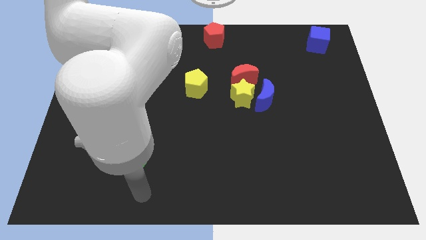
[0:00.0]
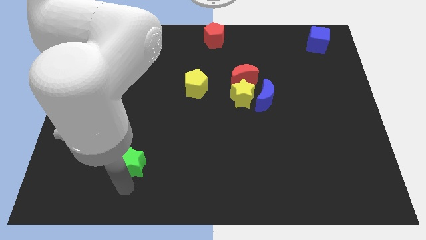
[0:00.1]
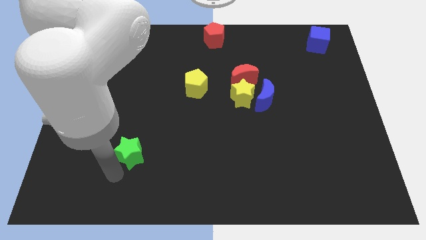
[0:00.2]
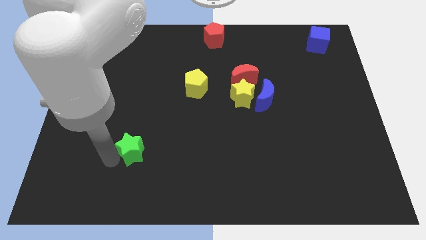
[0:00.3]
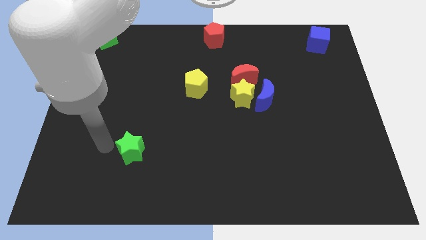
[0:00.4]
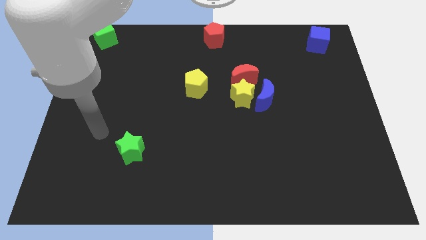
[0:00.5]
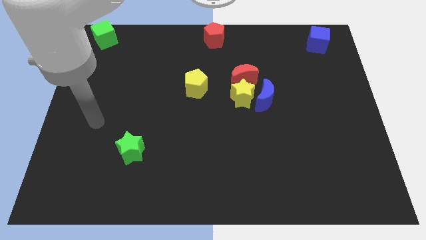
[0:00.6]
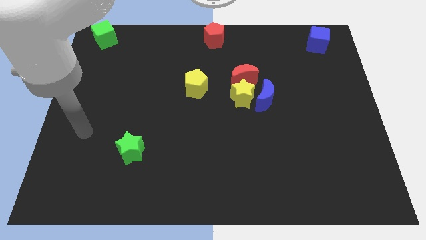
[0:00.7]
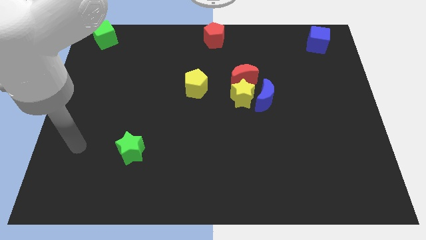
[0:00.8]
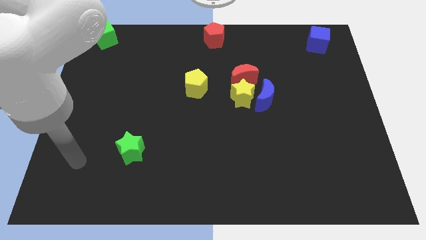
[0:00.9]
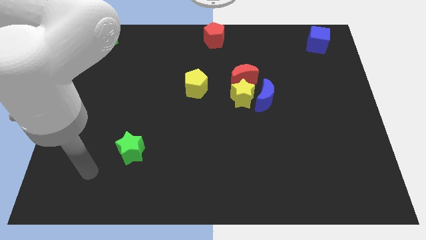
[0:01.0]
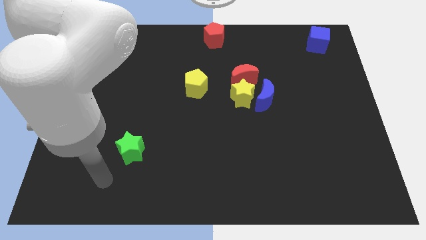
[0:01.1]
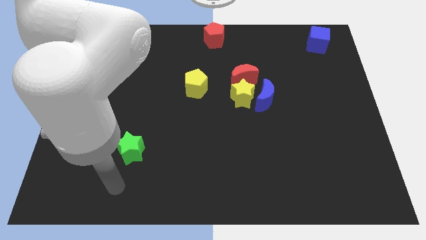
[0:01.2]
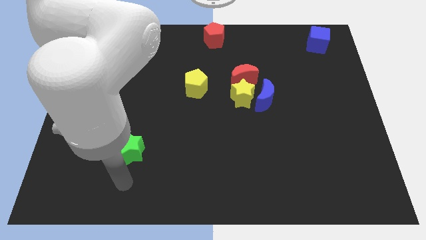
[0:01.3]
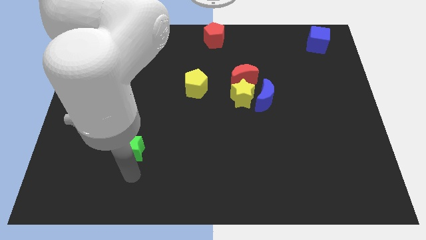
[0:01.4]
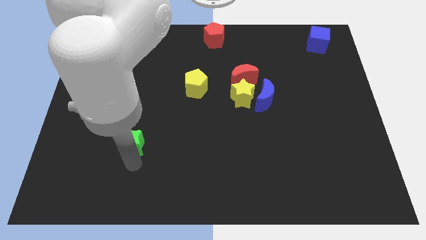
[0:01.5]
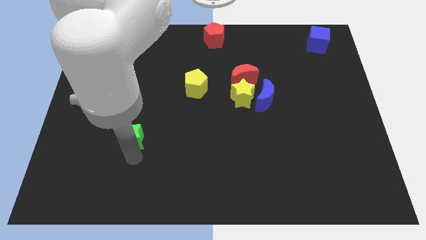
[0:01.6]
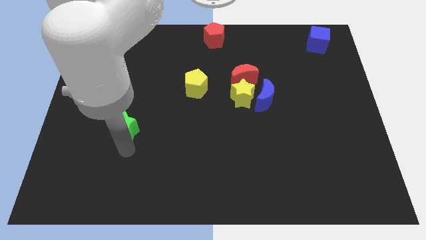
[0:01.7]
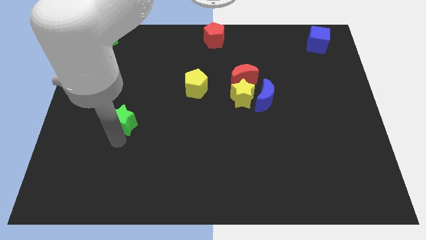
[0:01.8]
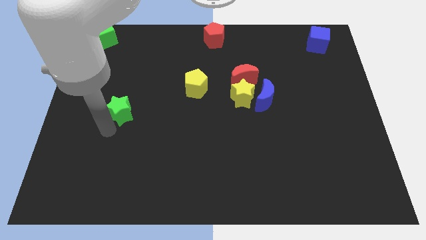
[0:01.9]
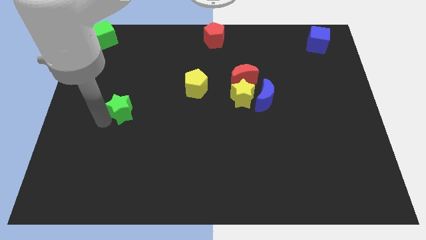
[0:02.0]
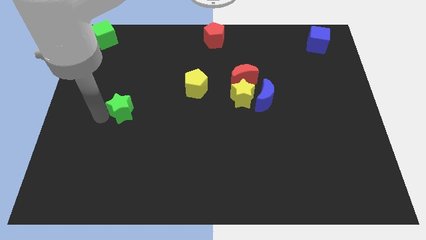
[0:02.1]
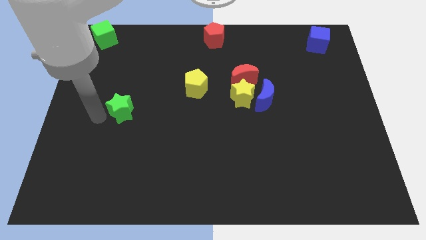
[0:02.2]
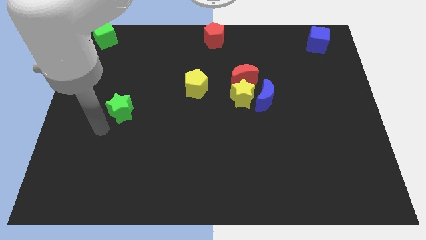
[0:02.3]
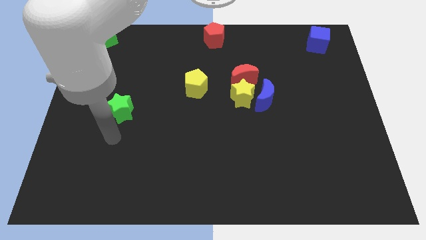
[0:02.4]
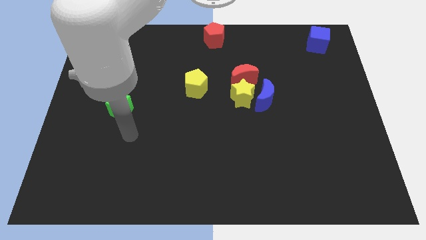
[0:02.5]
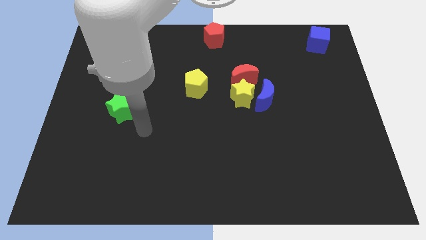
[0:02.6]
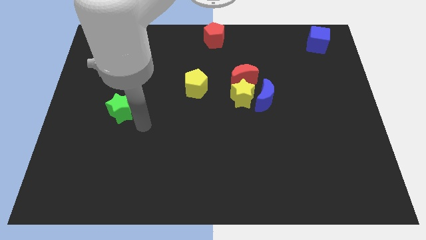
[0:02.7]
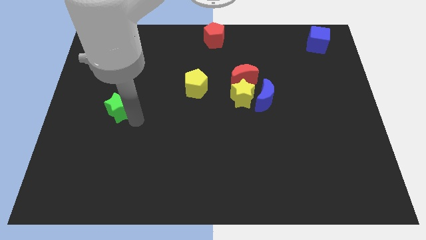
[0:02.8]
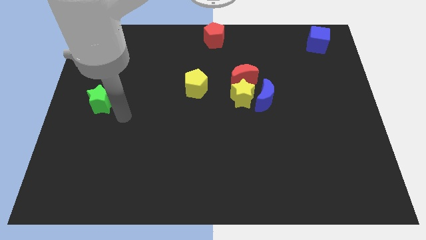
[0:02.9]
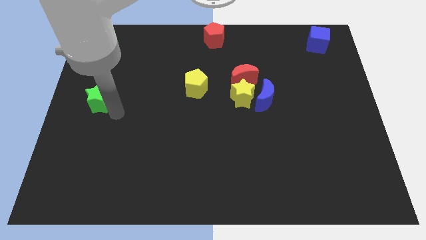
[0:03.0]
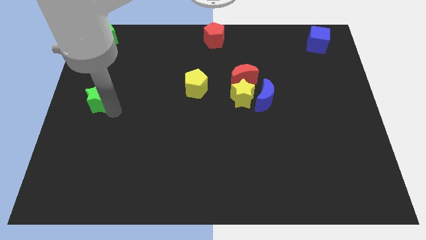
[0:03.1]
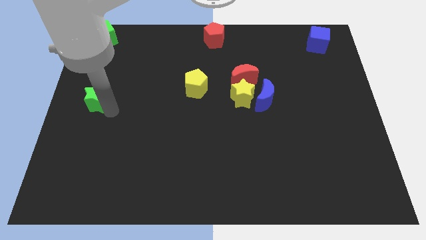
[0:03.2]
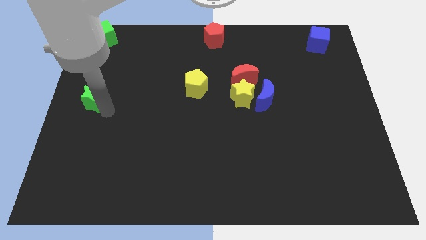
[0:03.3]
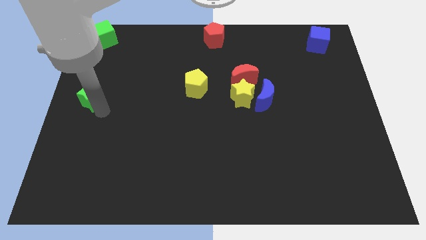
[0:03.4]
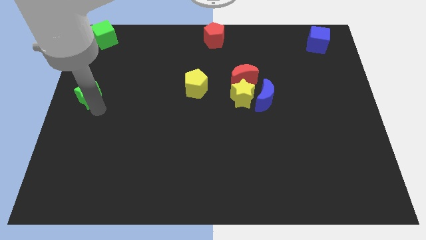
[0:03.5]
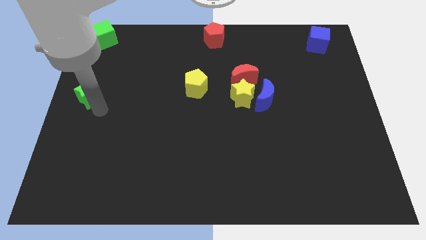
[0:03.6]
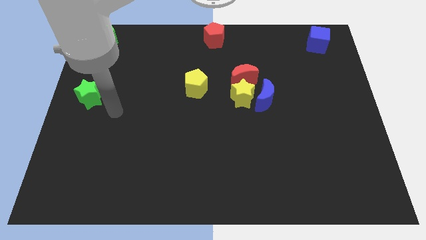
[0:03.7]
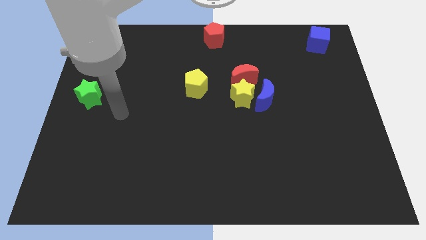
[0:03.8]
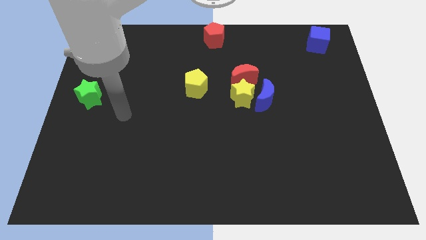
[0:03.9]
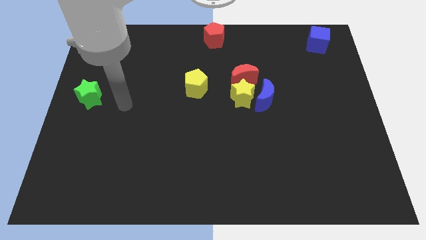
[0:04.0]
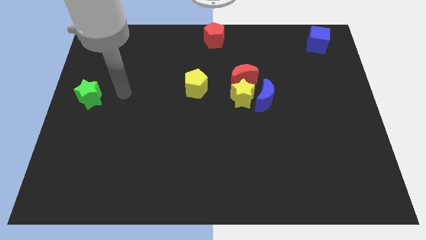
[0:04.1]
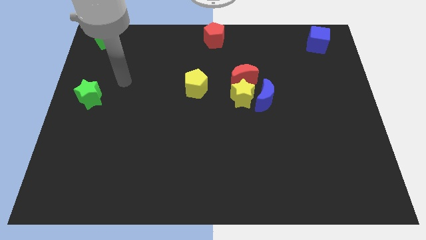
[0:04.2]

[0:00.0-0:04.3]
move the green star towards the center left

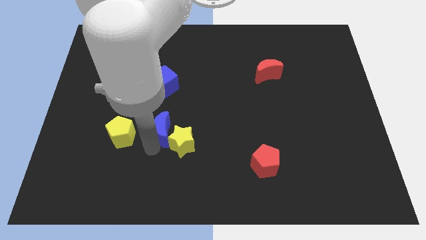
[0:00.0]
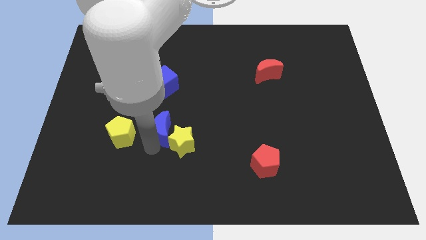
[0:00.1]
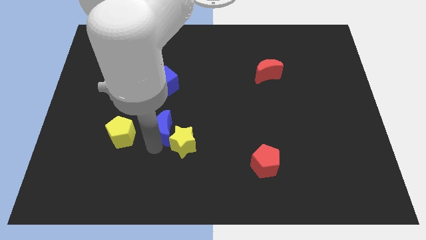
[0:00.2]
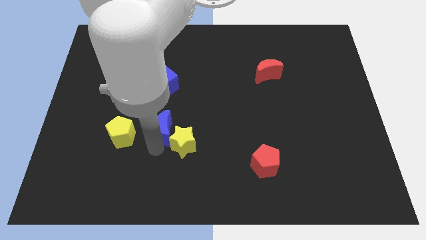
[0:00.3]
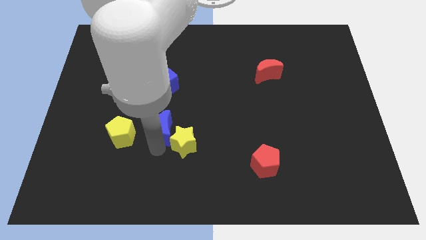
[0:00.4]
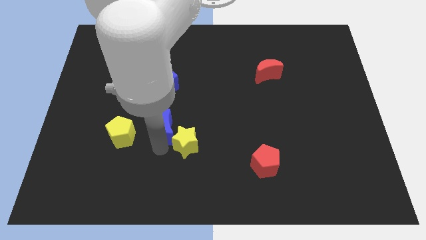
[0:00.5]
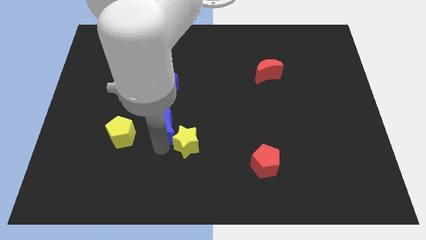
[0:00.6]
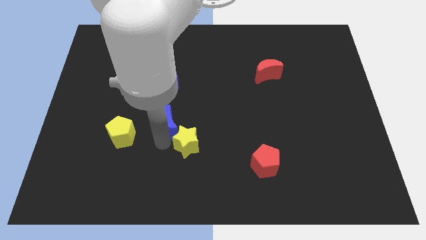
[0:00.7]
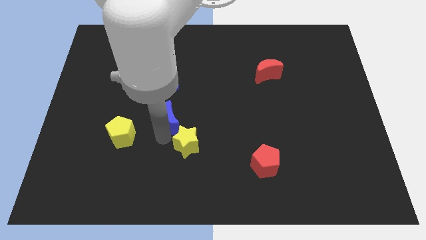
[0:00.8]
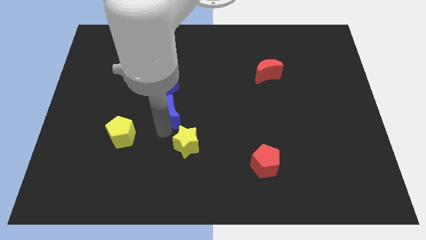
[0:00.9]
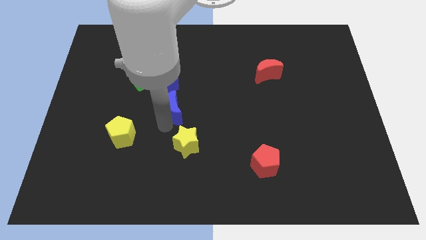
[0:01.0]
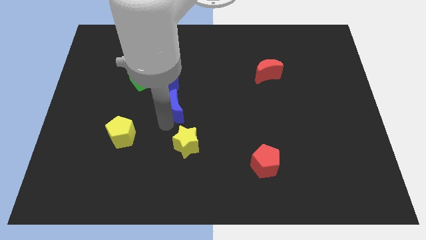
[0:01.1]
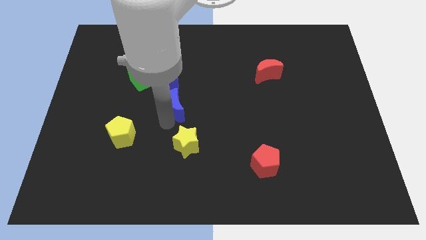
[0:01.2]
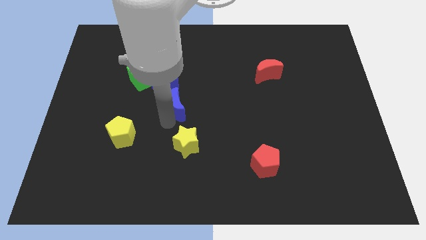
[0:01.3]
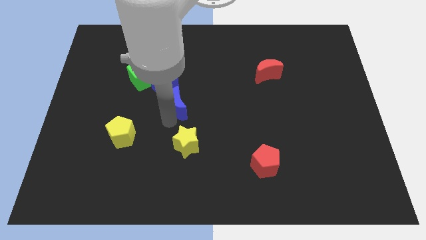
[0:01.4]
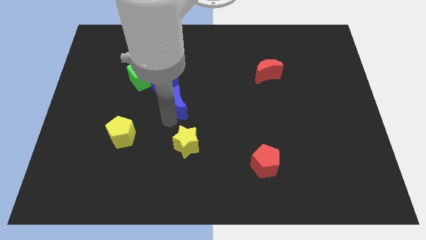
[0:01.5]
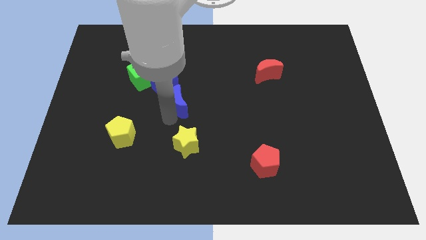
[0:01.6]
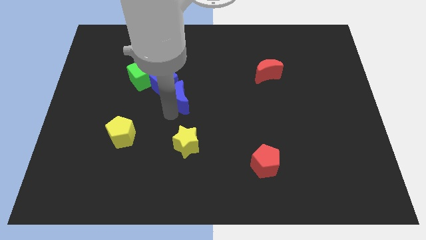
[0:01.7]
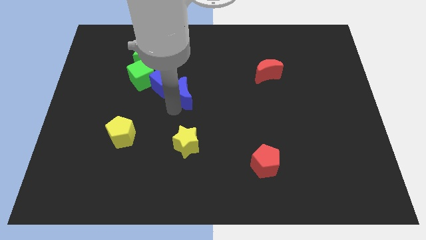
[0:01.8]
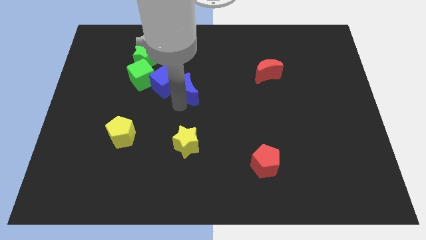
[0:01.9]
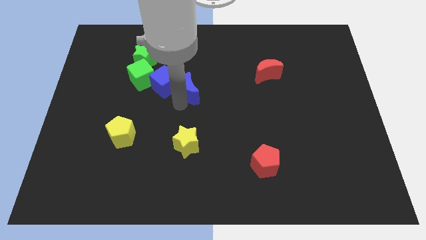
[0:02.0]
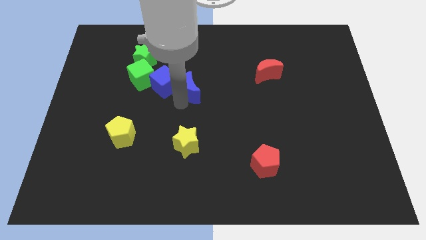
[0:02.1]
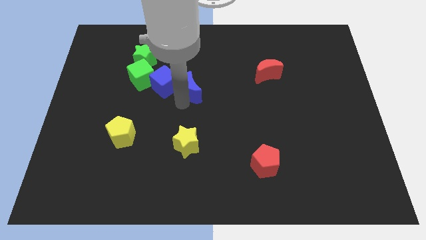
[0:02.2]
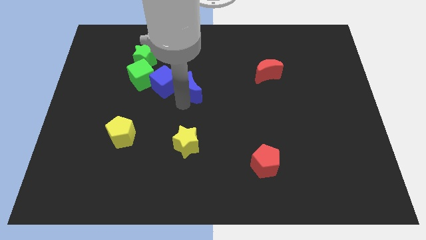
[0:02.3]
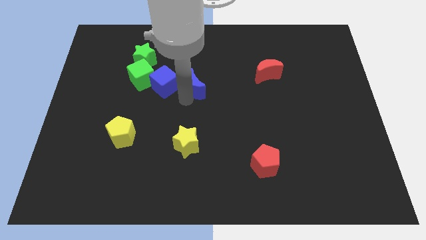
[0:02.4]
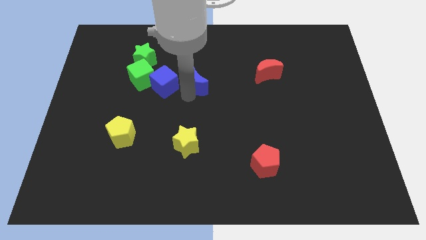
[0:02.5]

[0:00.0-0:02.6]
move blue crescent right to the blue cube

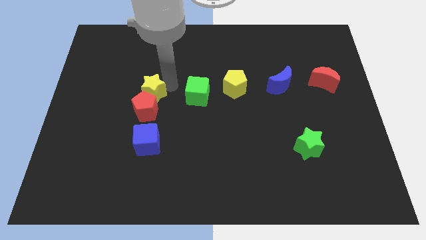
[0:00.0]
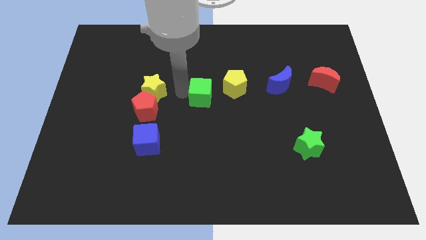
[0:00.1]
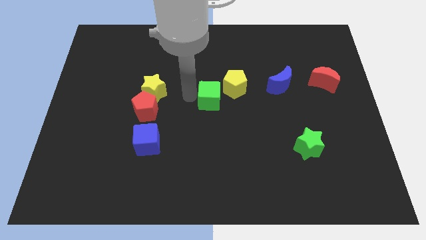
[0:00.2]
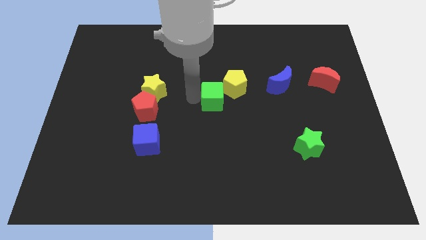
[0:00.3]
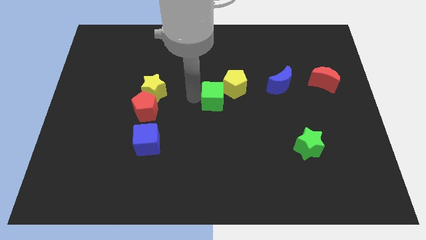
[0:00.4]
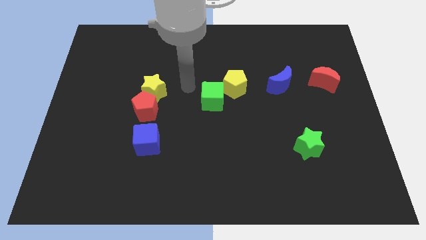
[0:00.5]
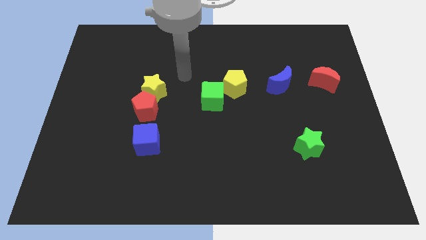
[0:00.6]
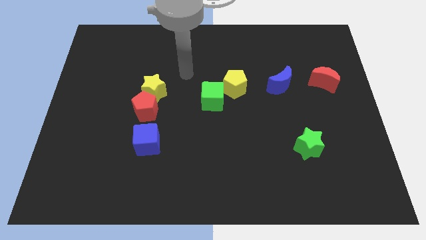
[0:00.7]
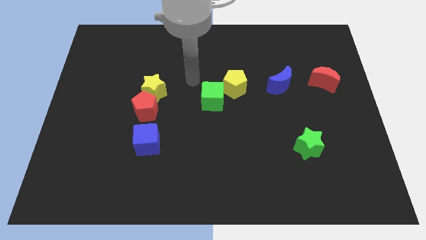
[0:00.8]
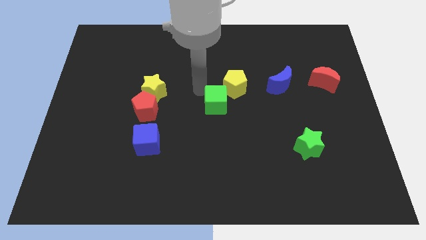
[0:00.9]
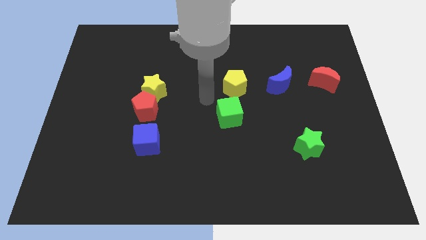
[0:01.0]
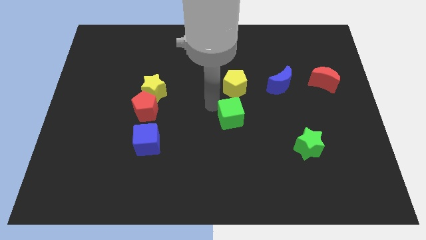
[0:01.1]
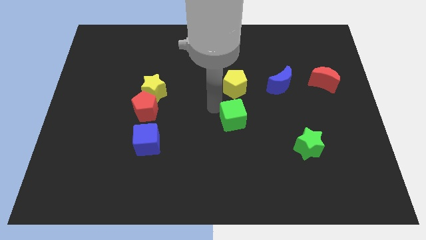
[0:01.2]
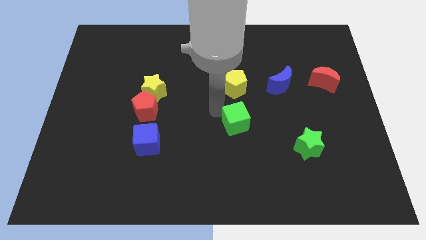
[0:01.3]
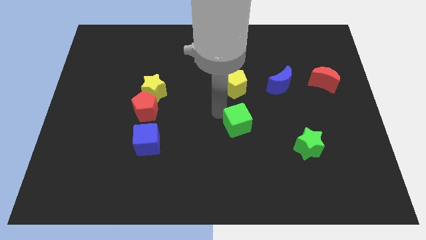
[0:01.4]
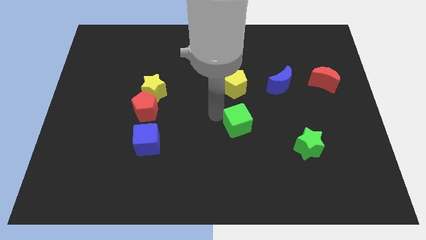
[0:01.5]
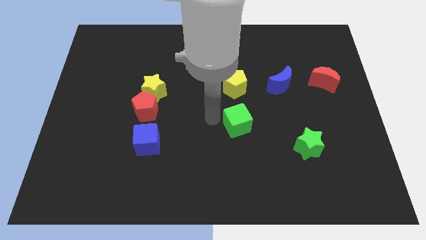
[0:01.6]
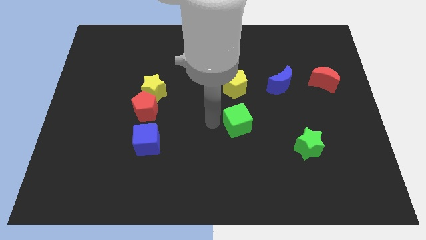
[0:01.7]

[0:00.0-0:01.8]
move the green cube to the bottom side of the yellow pentagon

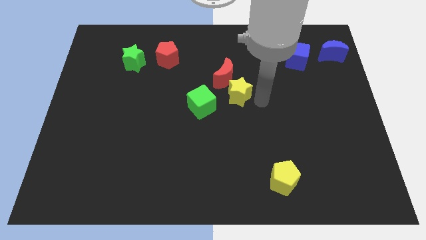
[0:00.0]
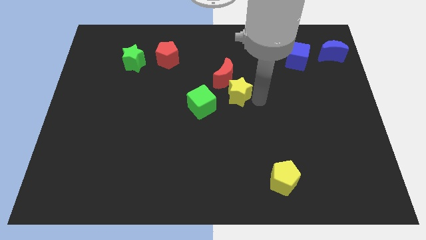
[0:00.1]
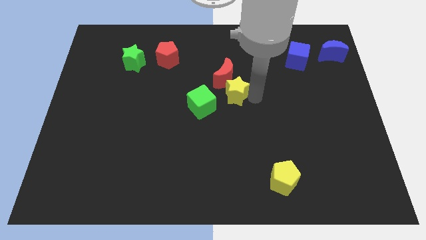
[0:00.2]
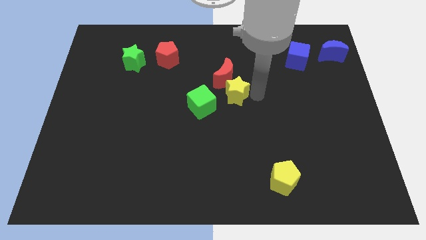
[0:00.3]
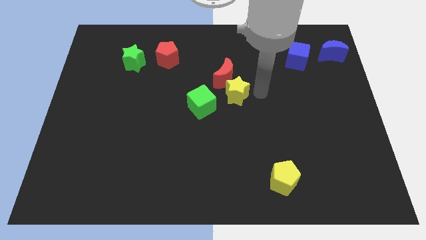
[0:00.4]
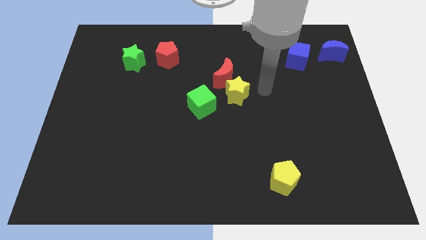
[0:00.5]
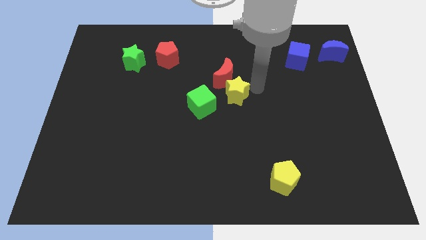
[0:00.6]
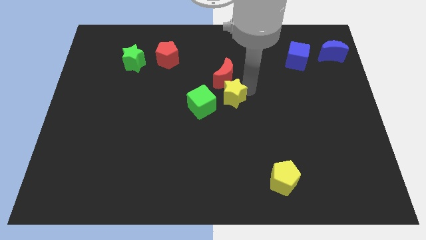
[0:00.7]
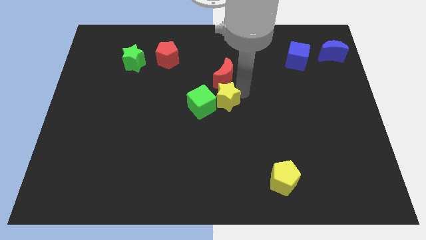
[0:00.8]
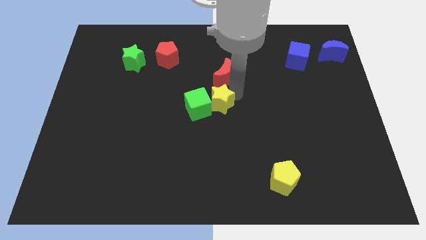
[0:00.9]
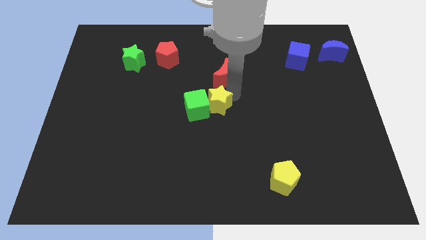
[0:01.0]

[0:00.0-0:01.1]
drag the yellow star into the right side of the green cube
